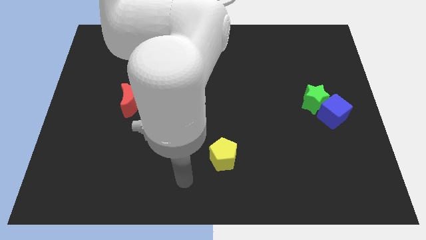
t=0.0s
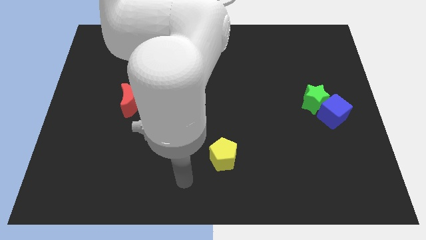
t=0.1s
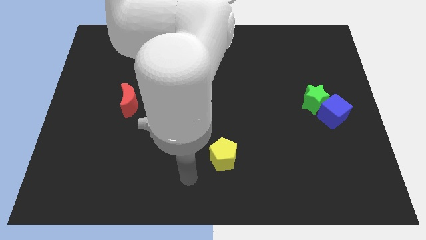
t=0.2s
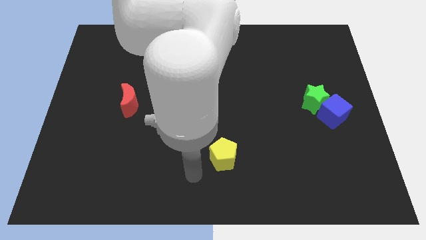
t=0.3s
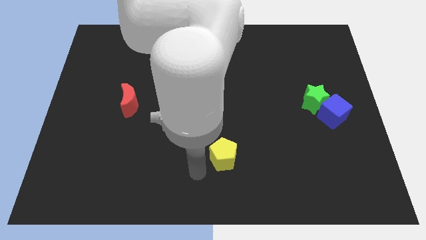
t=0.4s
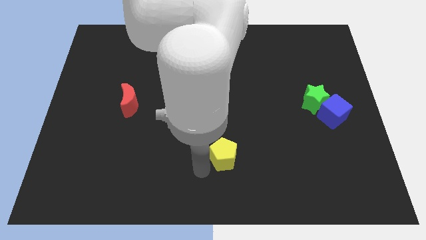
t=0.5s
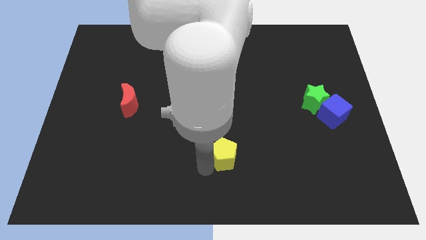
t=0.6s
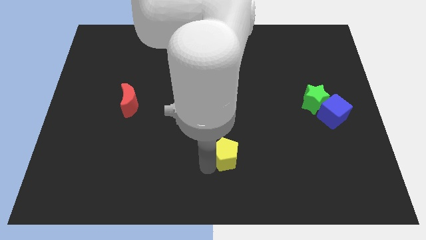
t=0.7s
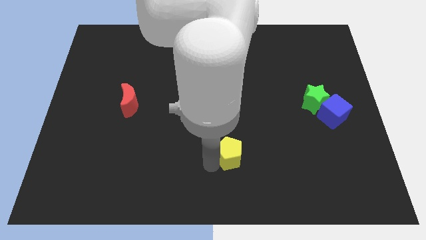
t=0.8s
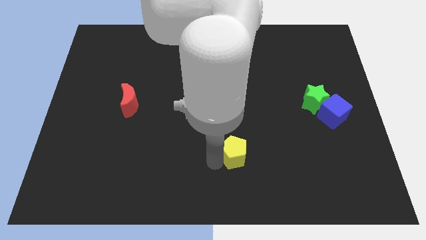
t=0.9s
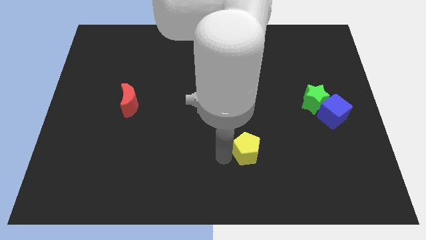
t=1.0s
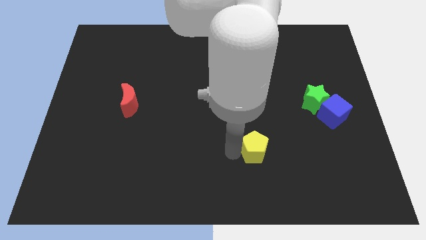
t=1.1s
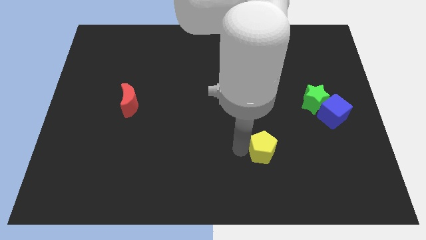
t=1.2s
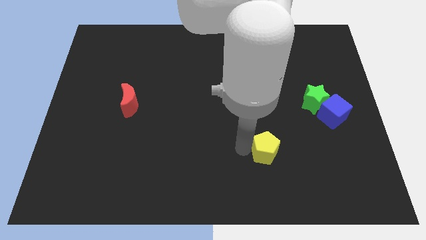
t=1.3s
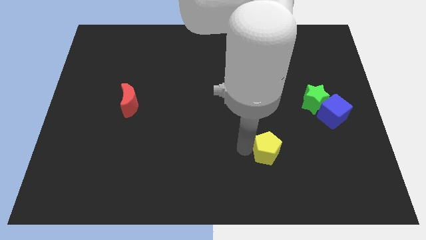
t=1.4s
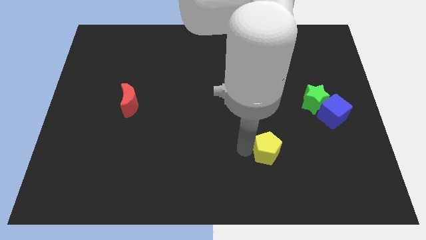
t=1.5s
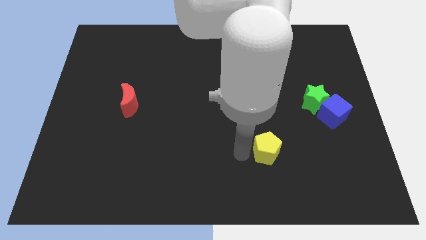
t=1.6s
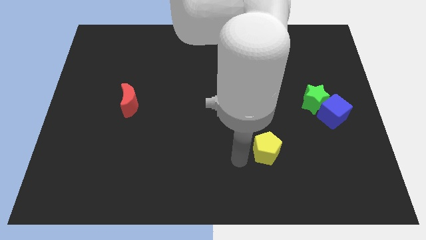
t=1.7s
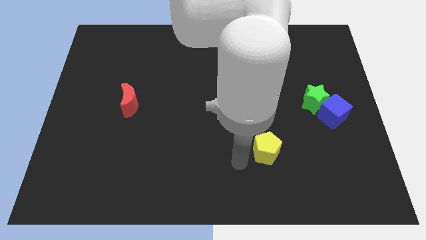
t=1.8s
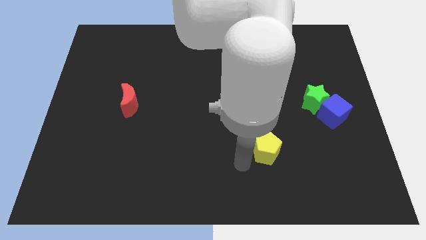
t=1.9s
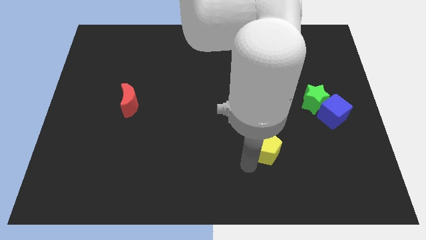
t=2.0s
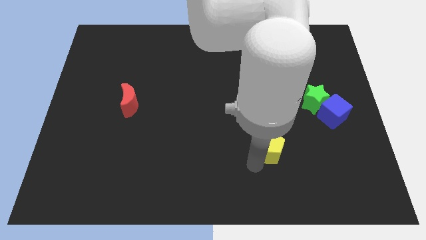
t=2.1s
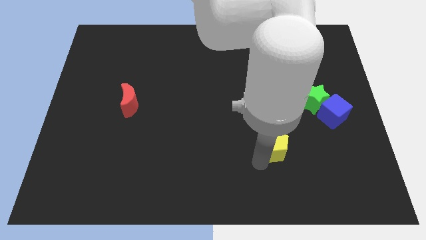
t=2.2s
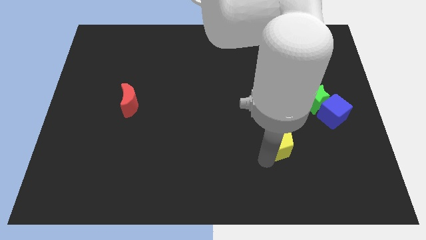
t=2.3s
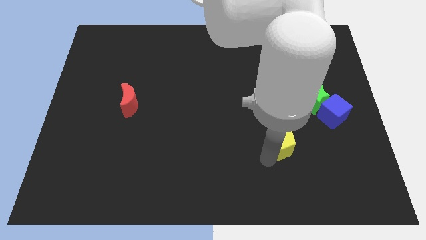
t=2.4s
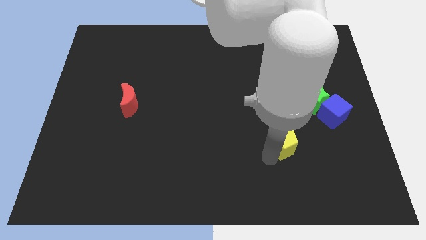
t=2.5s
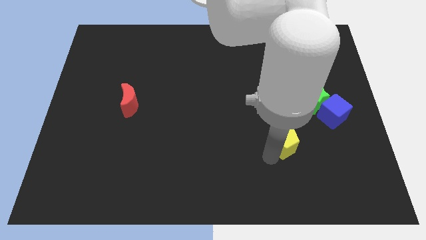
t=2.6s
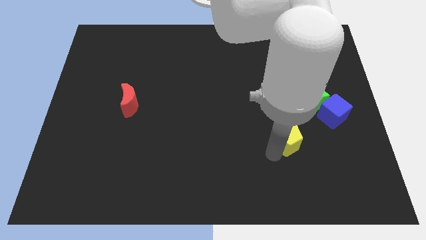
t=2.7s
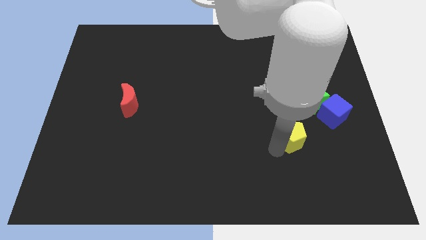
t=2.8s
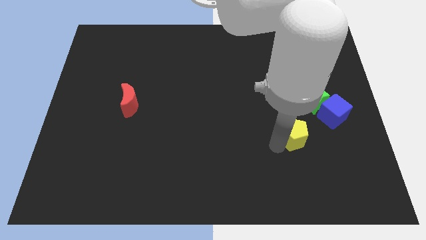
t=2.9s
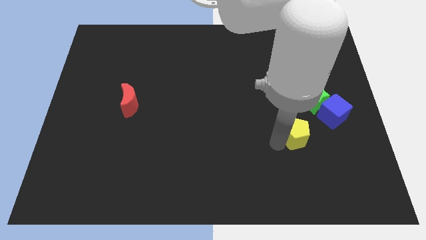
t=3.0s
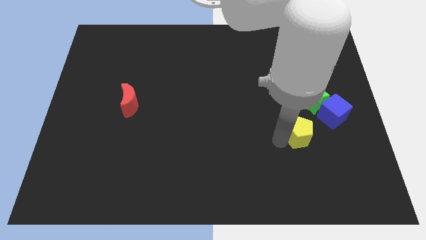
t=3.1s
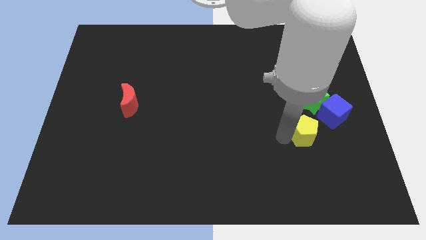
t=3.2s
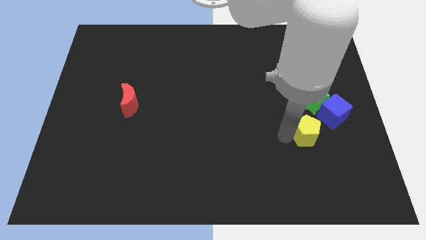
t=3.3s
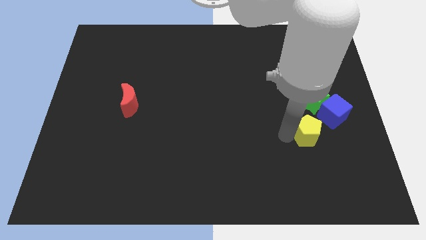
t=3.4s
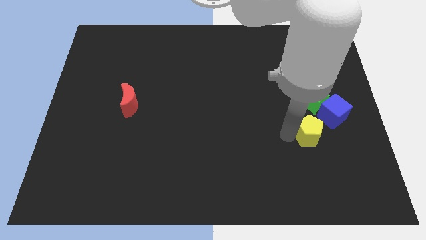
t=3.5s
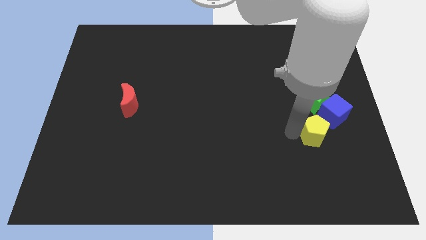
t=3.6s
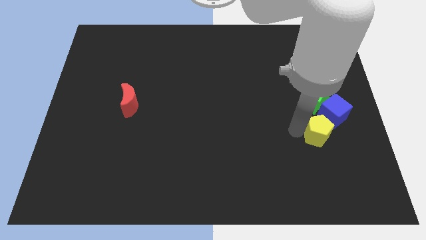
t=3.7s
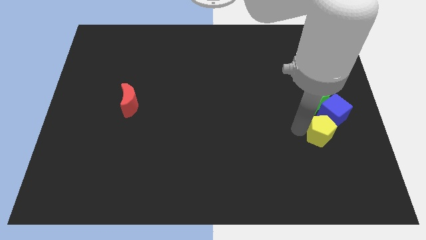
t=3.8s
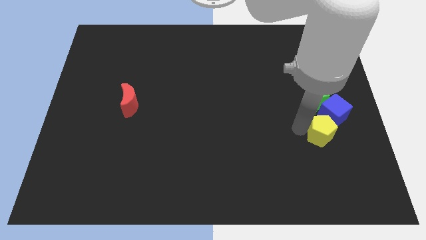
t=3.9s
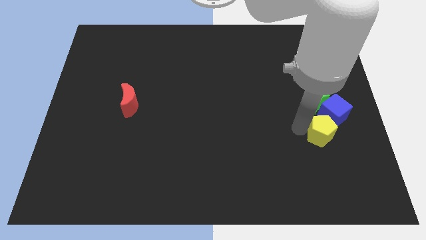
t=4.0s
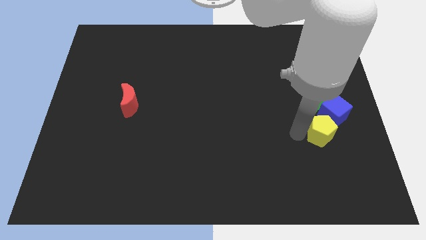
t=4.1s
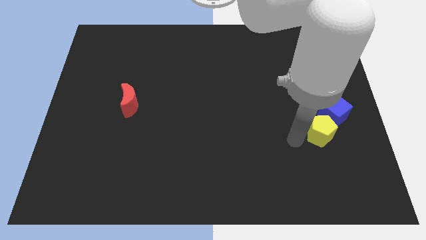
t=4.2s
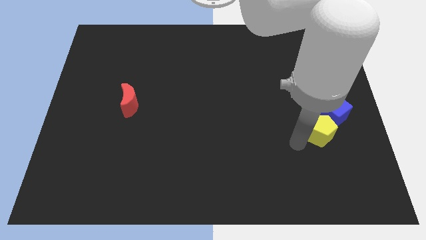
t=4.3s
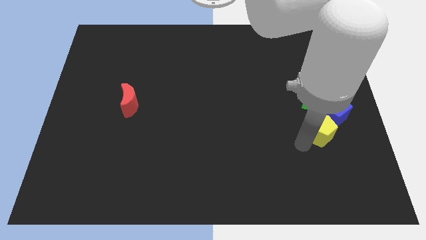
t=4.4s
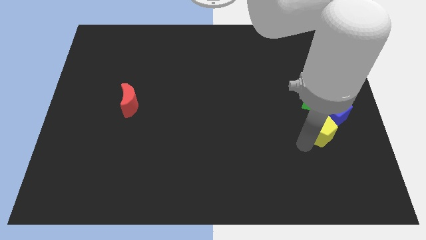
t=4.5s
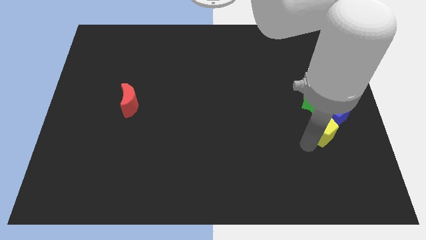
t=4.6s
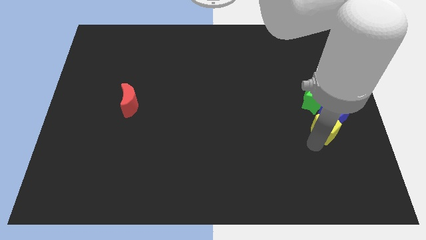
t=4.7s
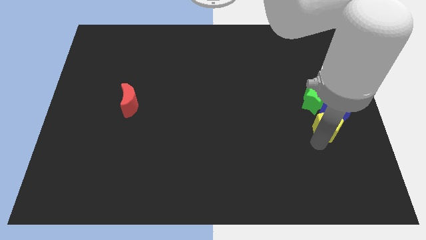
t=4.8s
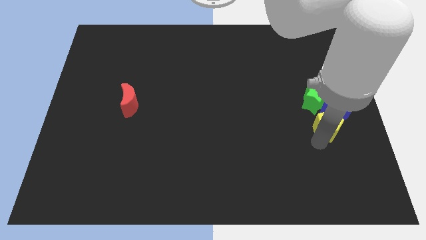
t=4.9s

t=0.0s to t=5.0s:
push the pentagon next to the cube

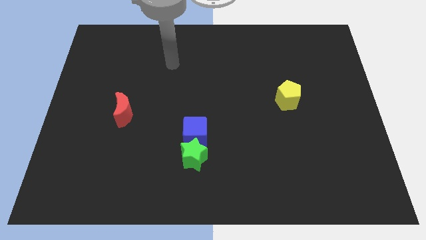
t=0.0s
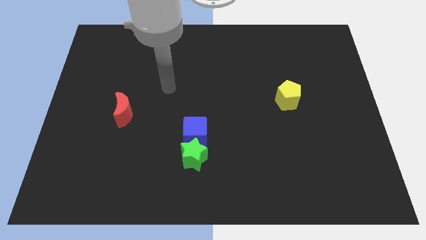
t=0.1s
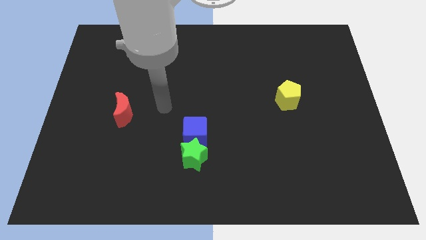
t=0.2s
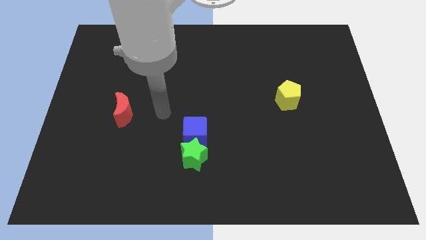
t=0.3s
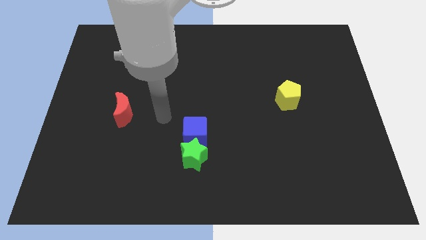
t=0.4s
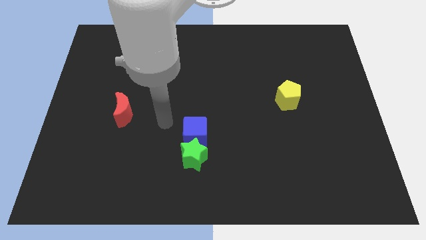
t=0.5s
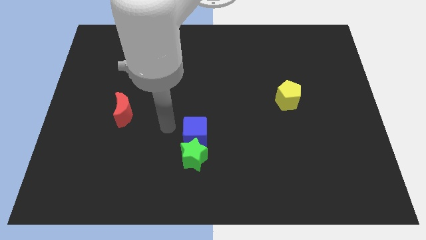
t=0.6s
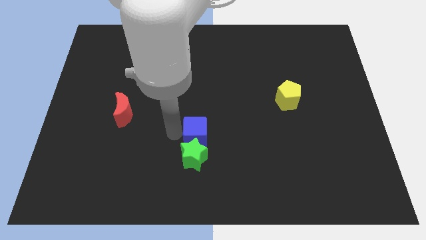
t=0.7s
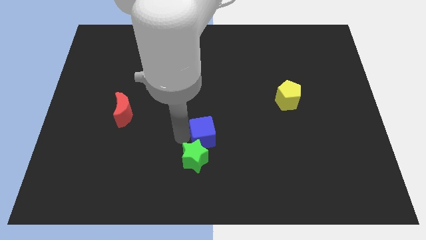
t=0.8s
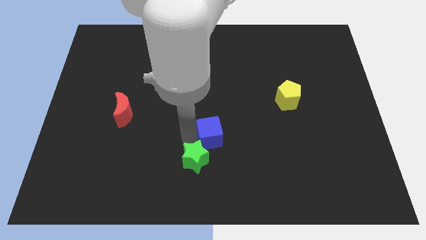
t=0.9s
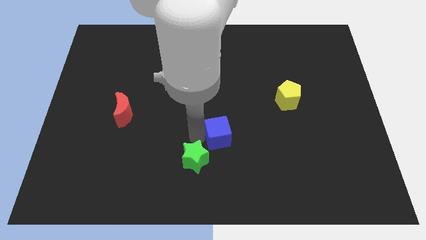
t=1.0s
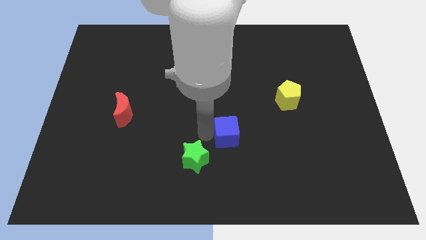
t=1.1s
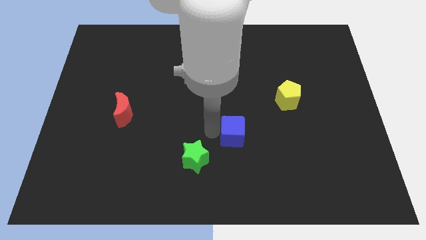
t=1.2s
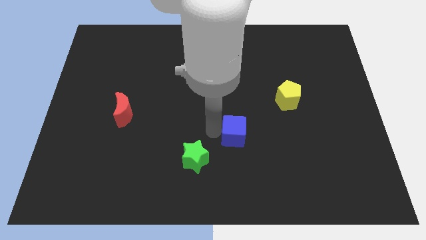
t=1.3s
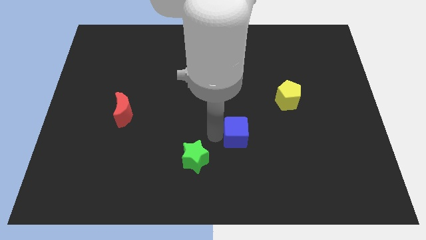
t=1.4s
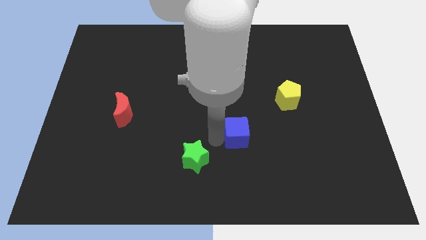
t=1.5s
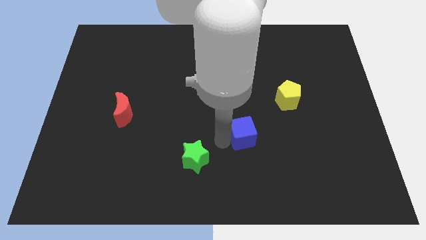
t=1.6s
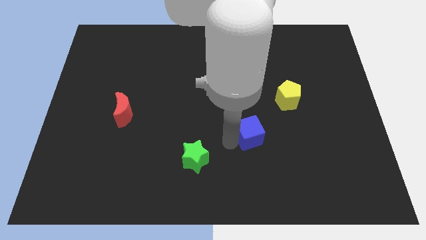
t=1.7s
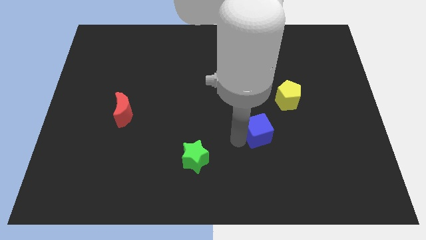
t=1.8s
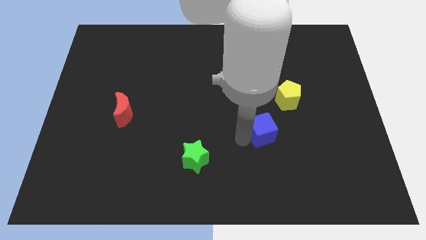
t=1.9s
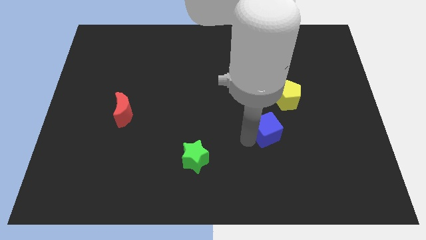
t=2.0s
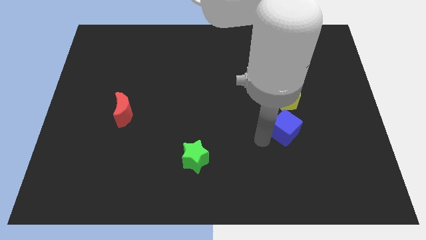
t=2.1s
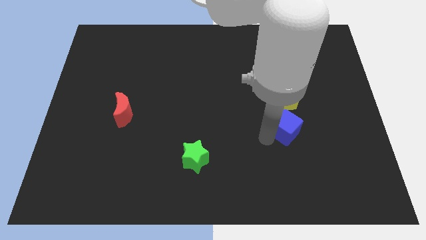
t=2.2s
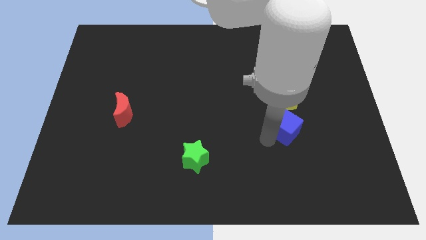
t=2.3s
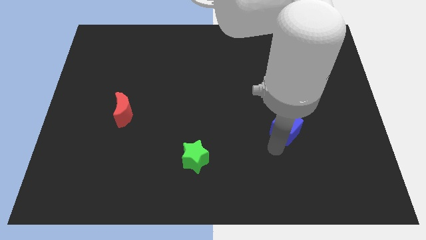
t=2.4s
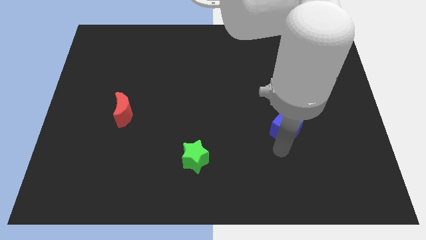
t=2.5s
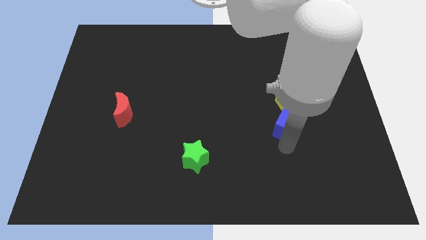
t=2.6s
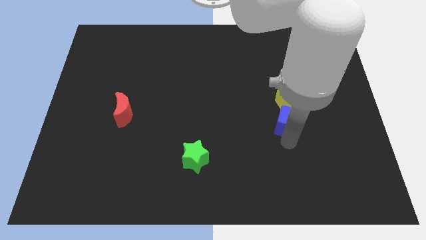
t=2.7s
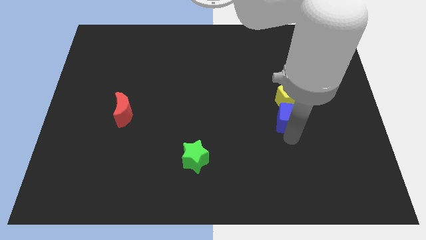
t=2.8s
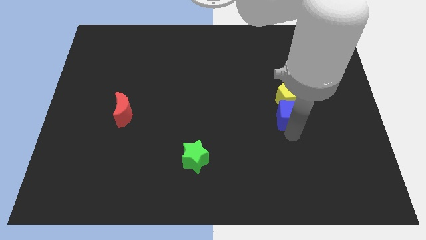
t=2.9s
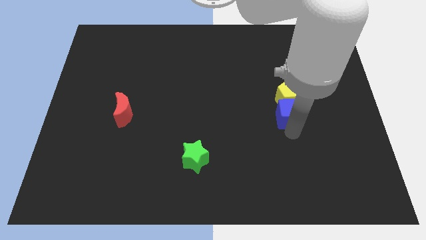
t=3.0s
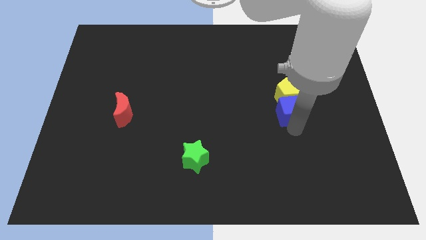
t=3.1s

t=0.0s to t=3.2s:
slide the cube to the yellow block

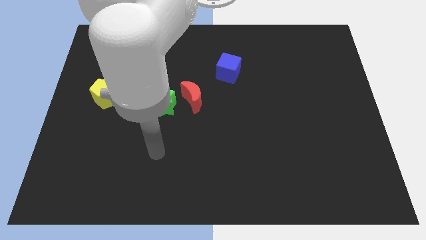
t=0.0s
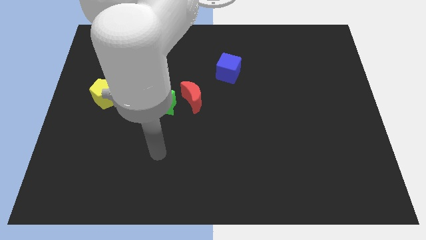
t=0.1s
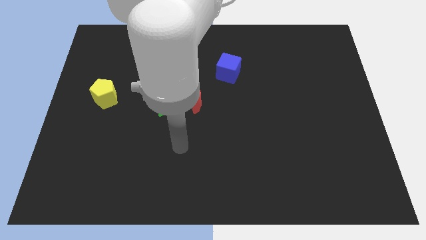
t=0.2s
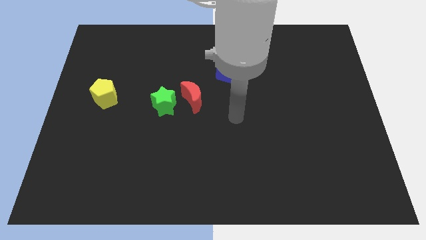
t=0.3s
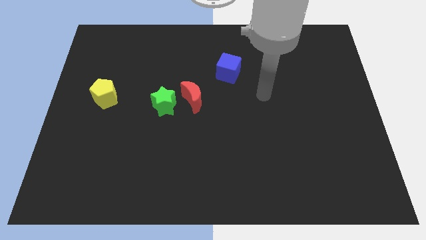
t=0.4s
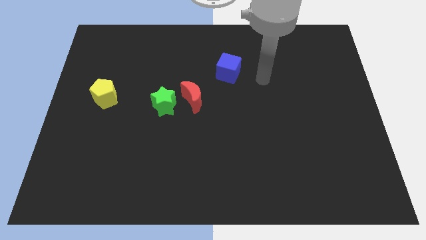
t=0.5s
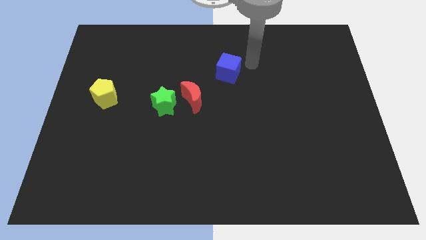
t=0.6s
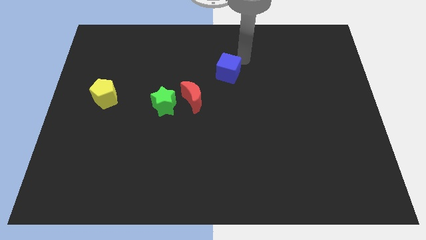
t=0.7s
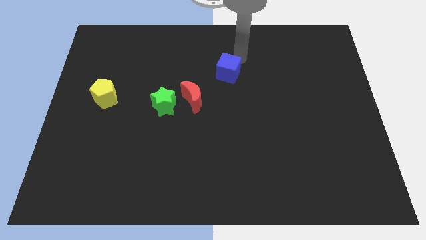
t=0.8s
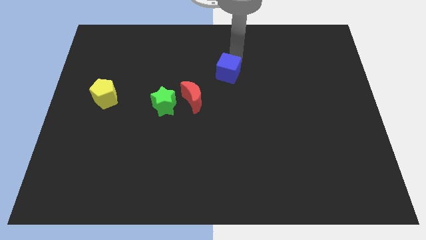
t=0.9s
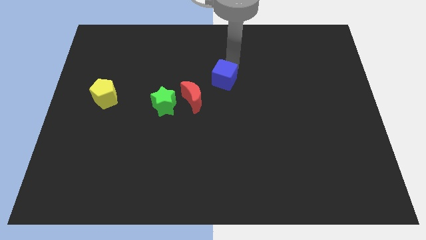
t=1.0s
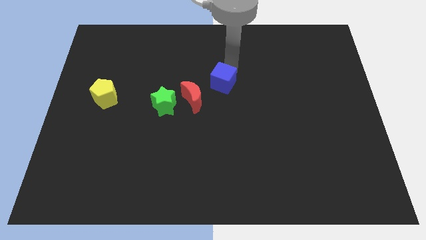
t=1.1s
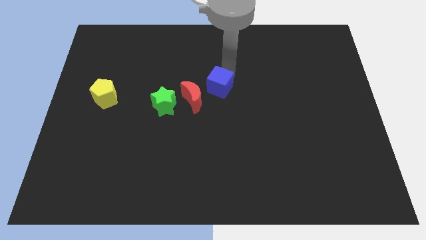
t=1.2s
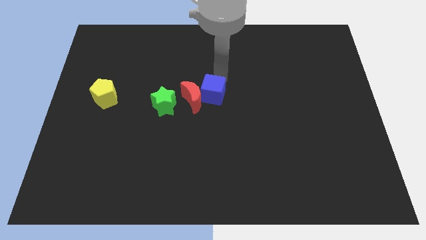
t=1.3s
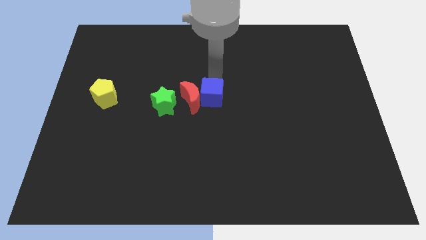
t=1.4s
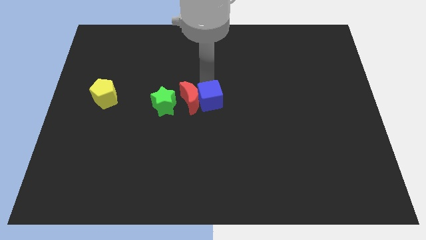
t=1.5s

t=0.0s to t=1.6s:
put the cube towards the red block
